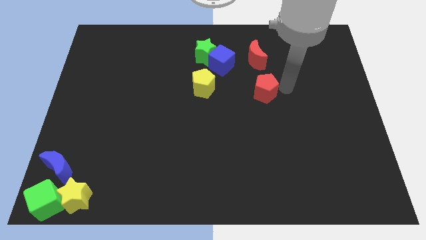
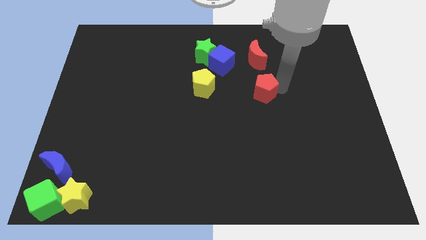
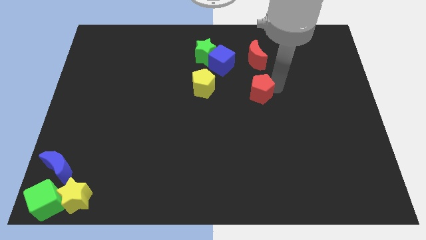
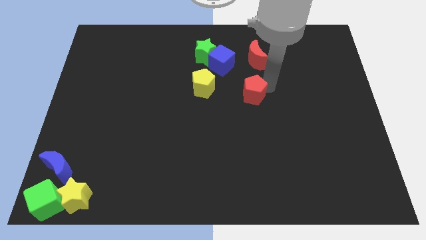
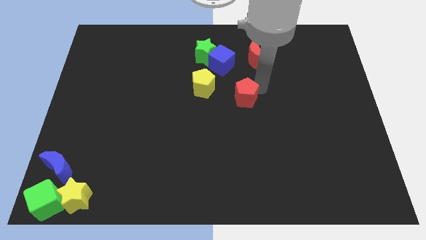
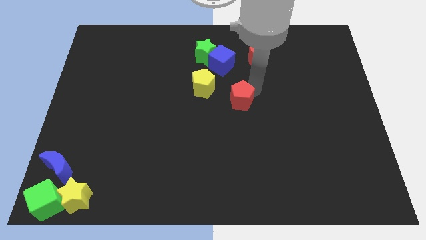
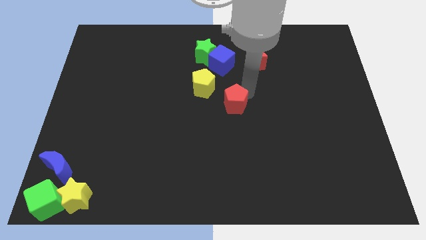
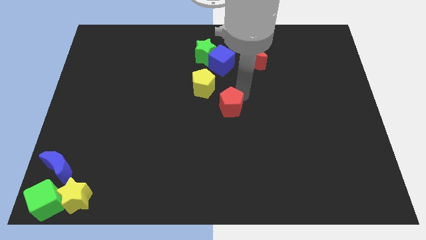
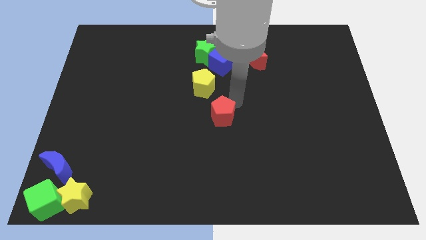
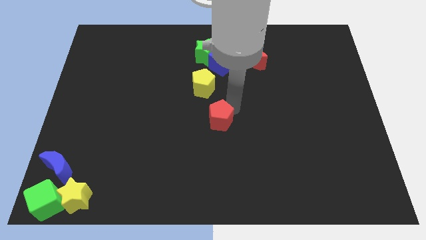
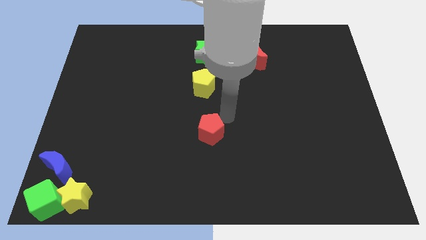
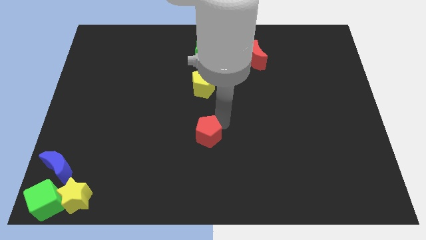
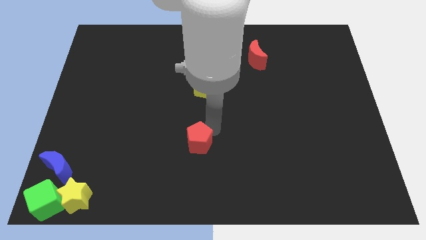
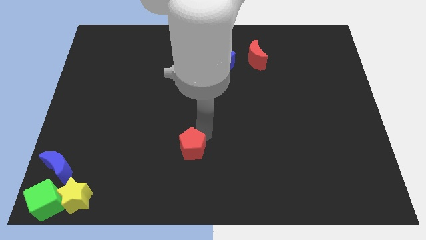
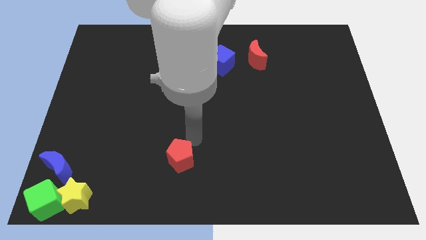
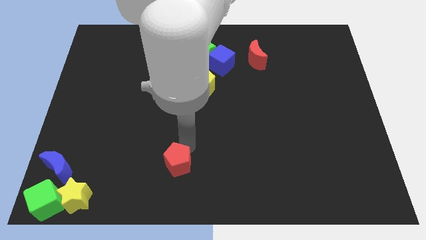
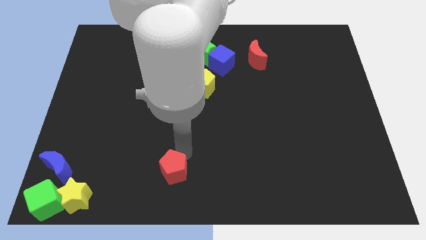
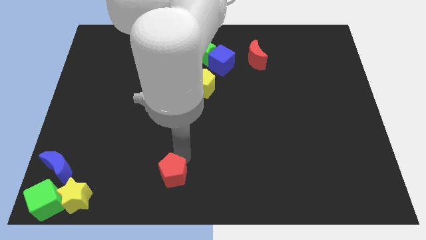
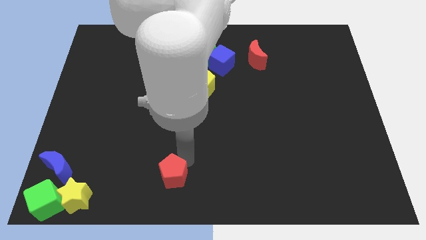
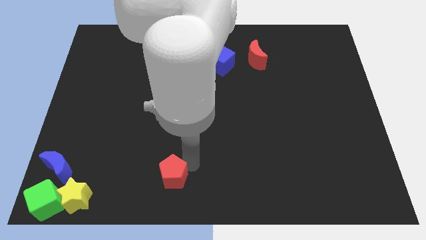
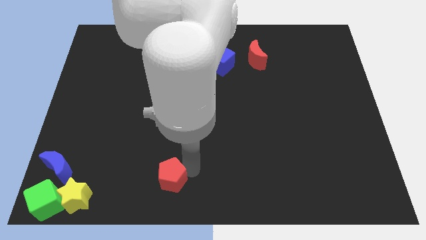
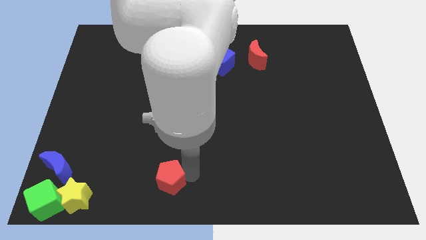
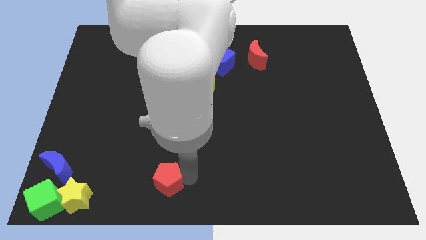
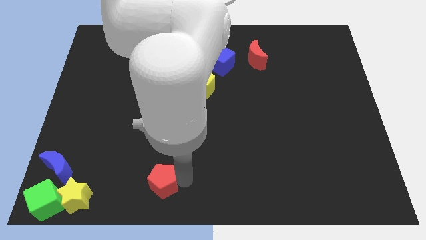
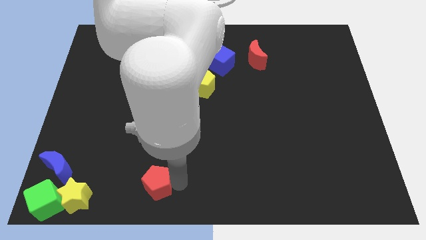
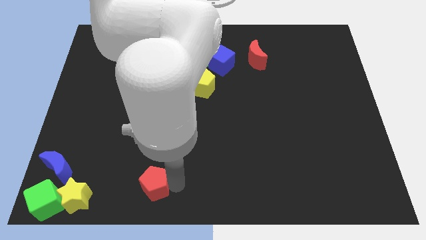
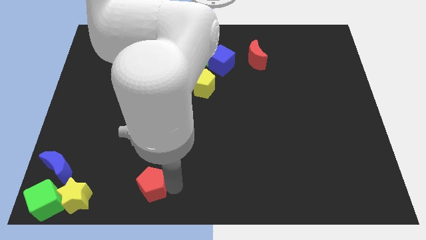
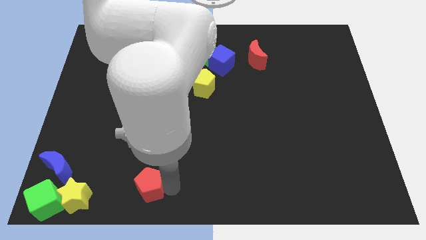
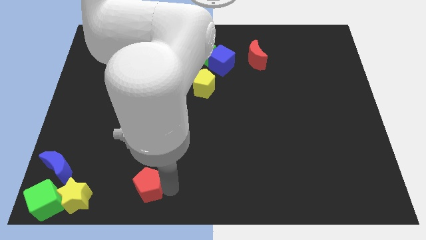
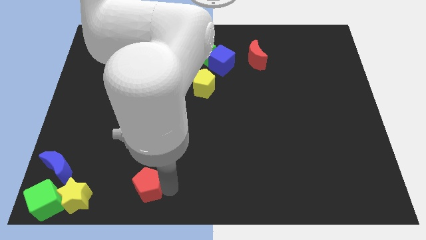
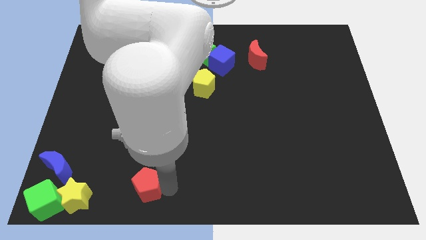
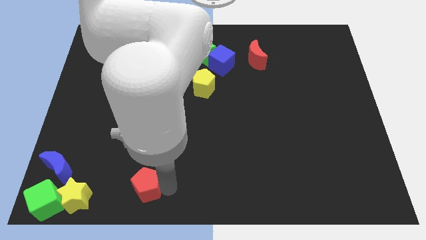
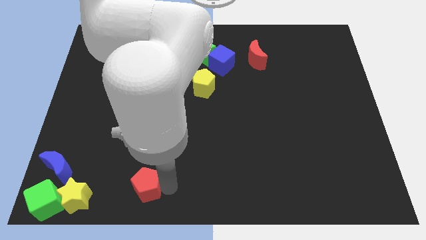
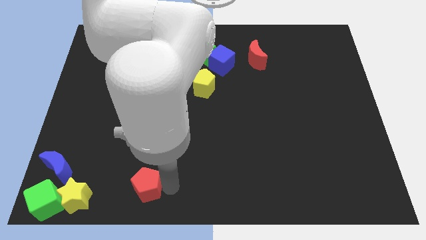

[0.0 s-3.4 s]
place the red pentagon diagonally bottom left to the yellow pentagon

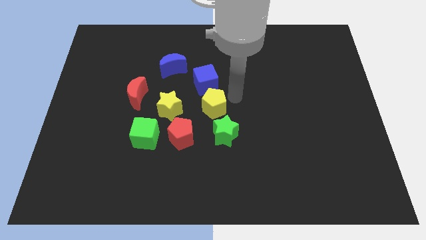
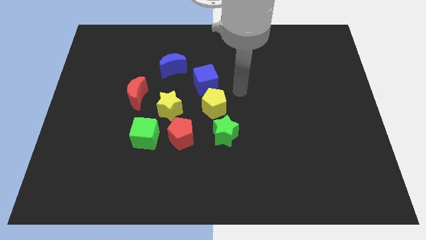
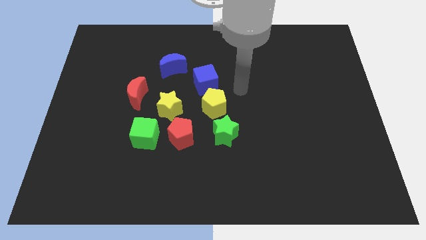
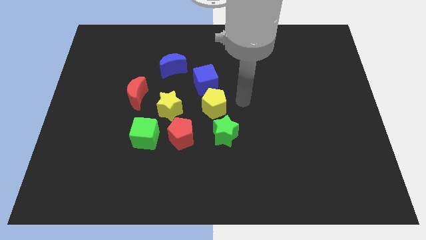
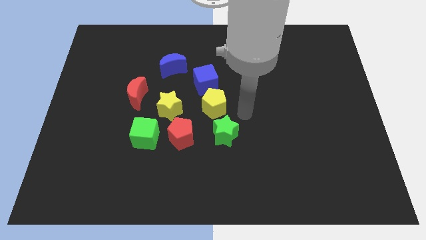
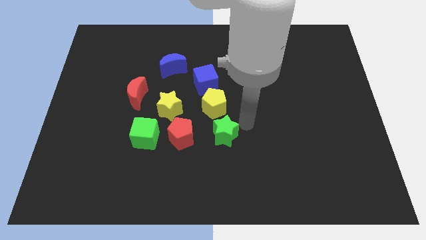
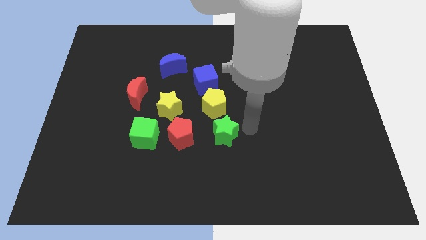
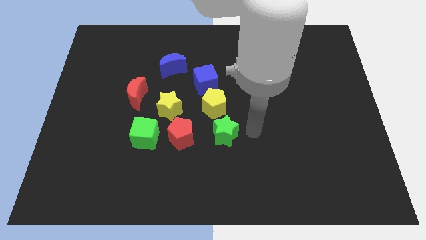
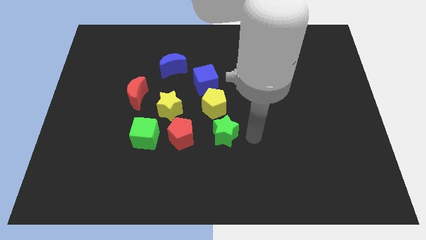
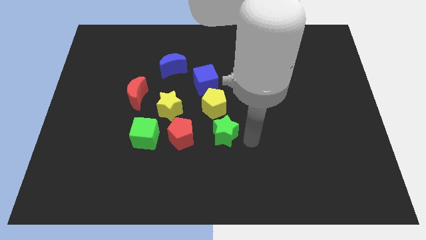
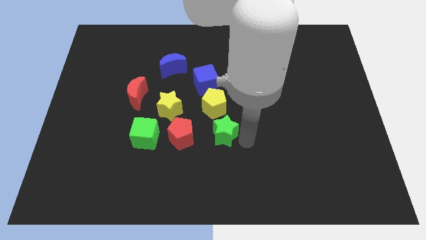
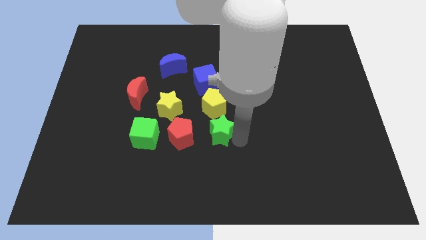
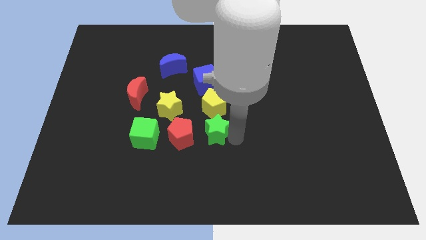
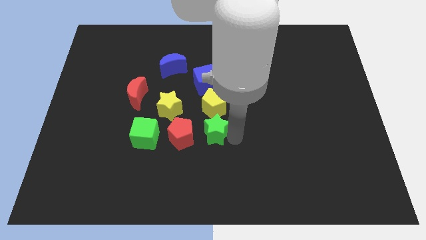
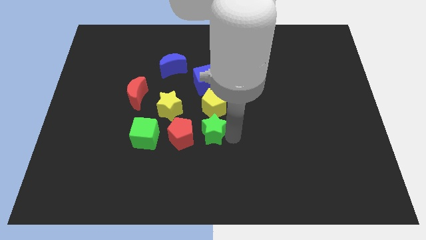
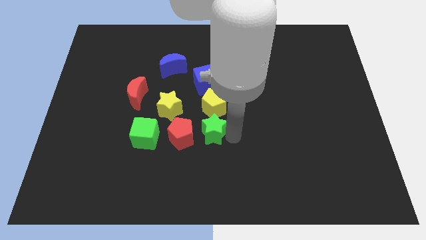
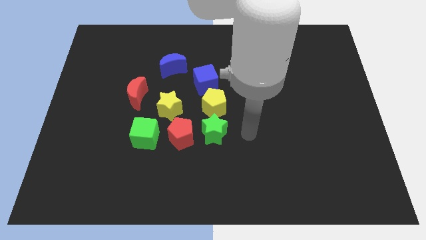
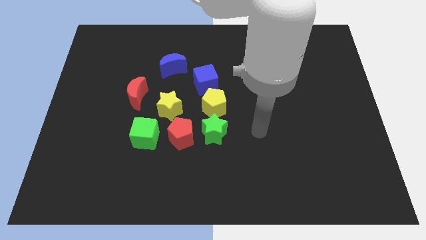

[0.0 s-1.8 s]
move the green star close to the yellow pentagon

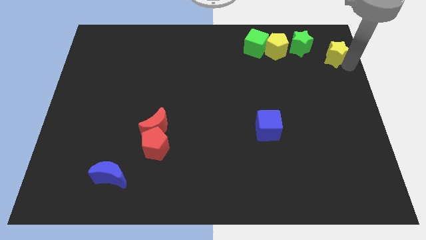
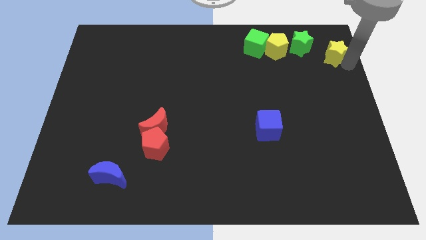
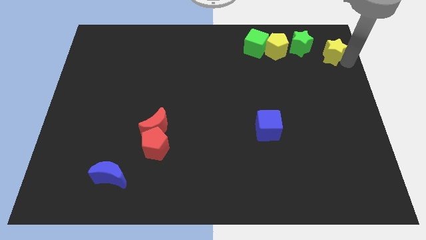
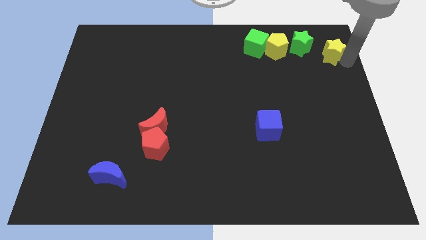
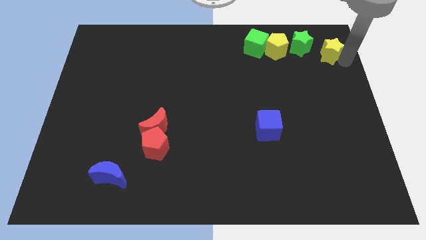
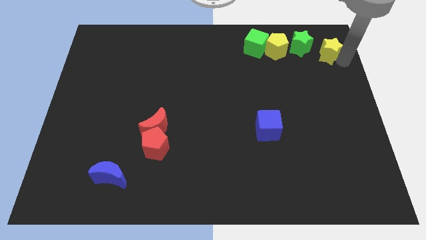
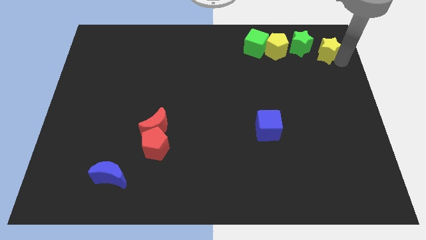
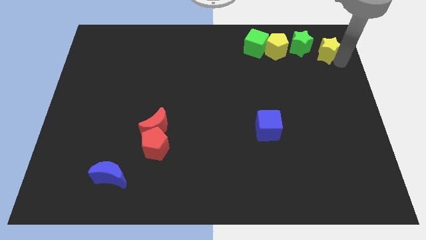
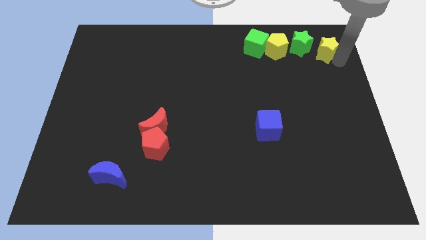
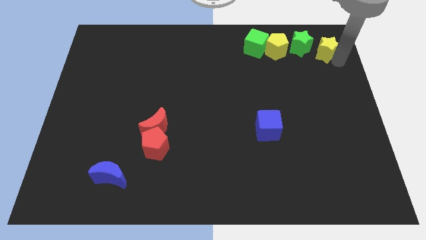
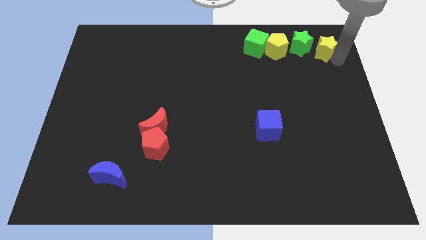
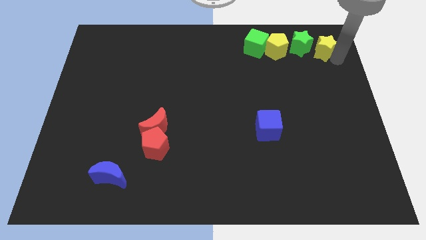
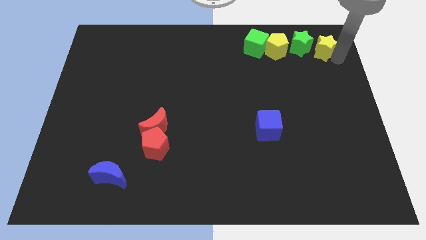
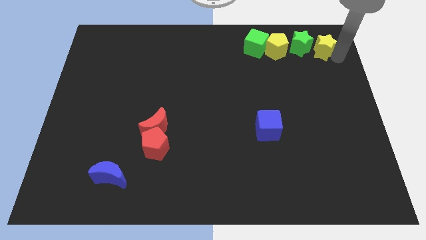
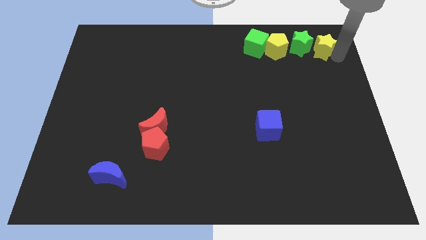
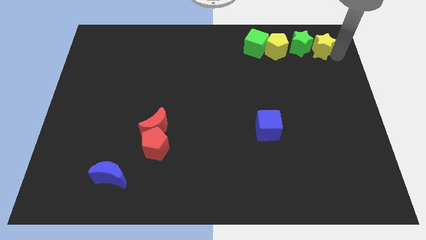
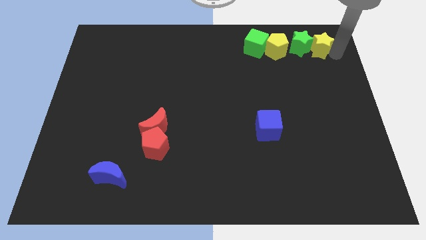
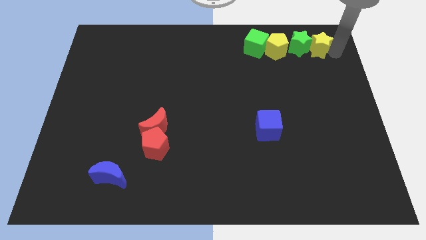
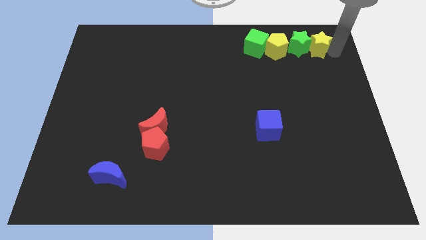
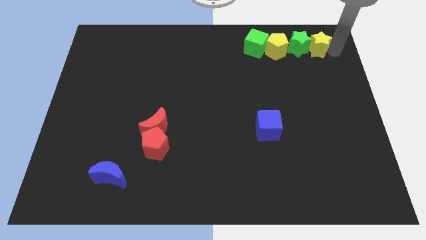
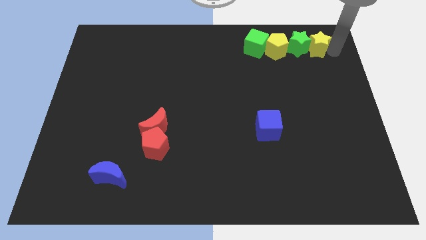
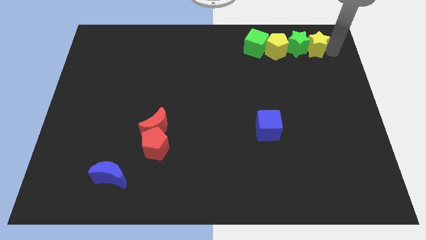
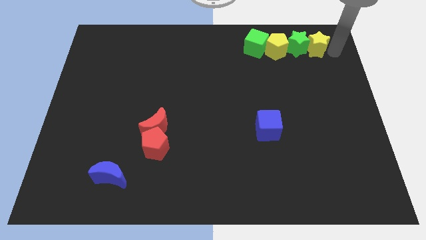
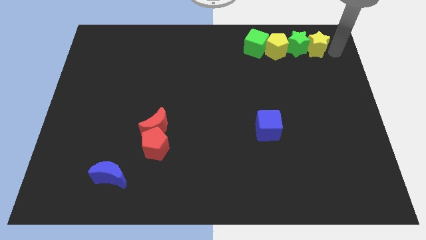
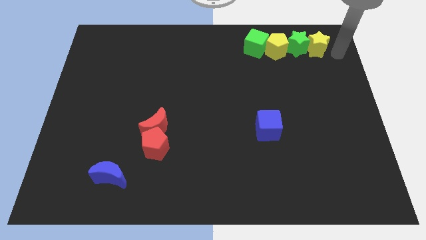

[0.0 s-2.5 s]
move the yellow star into the green star

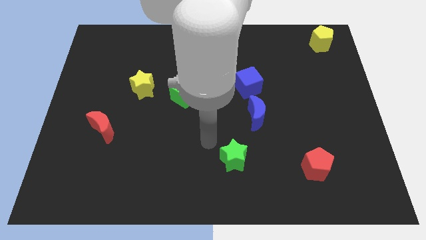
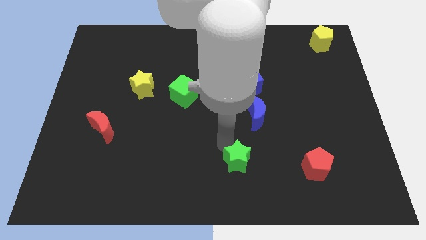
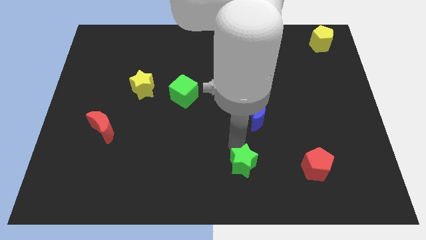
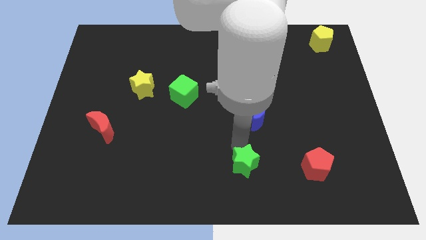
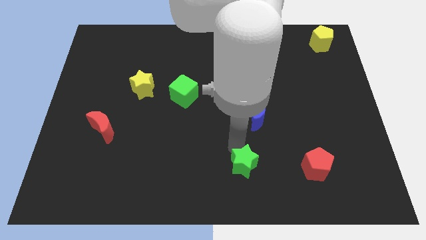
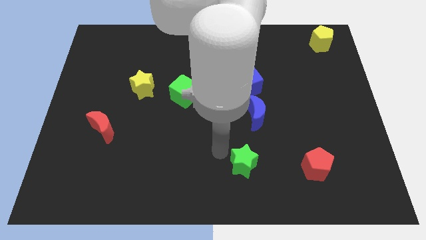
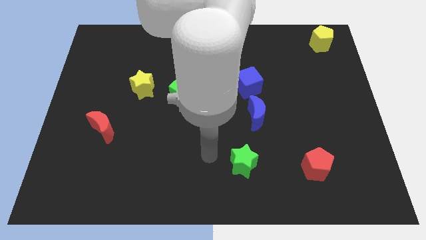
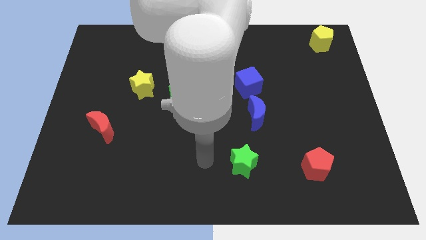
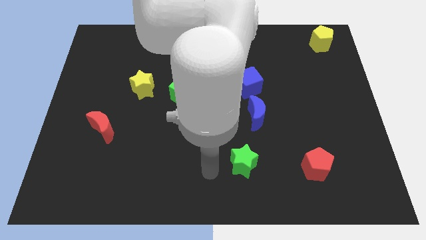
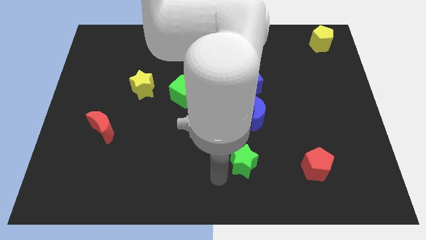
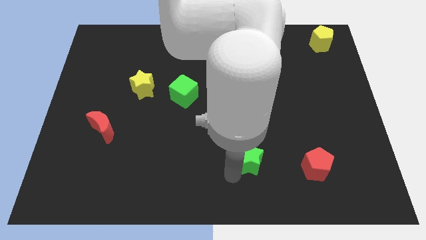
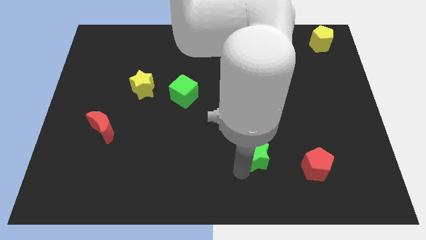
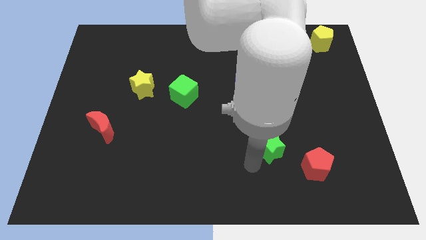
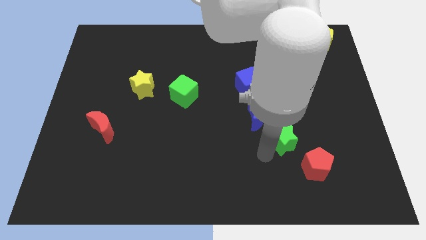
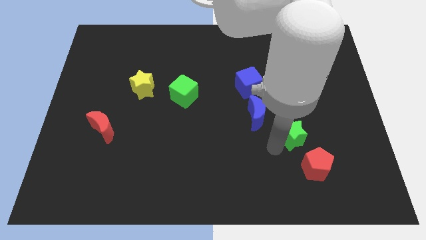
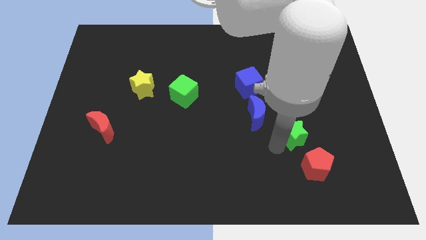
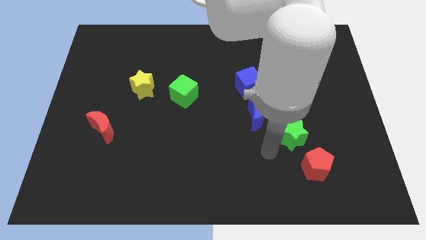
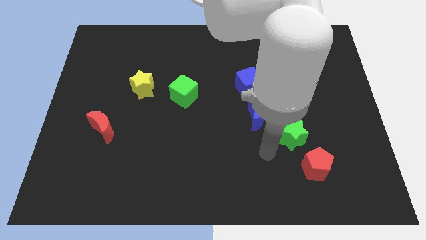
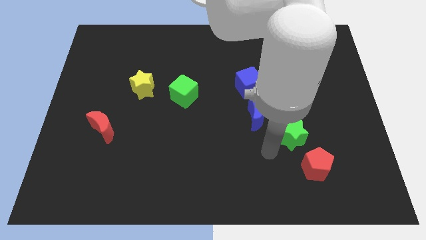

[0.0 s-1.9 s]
place the green star to the bottom right of the blue moon
